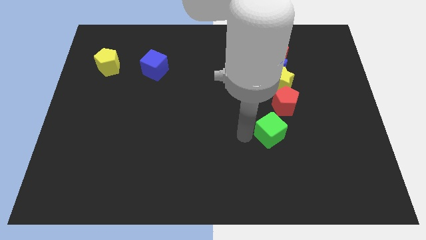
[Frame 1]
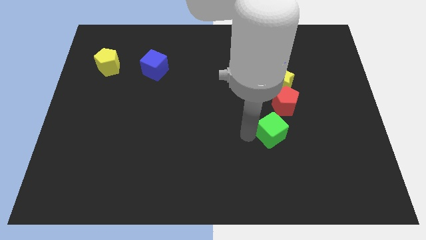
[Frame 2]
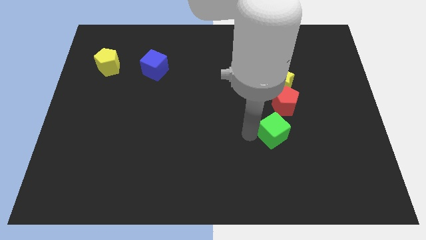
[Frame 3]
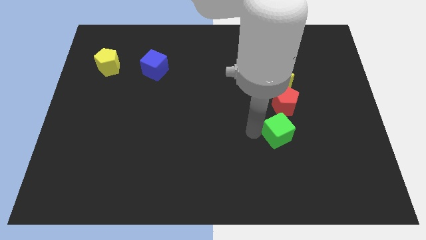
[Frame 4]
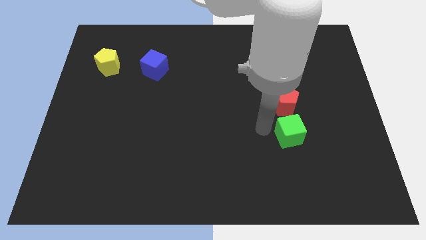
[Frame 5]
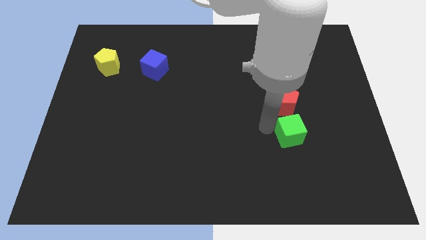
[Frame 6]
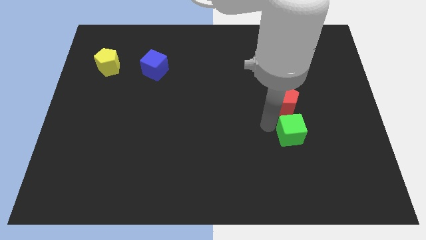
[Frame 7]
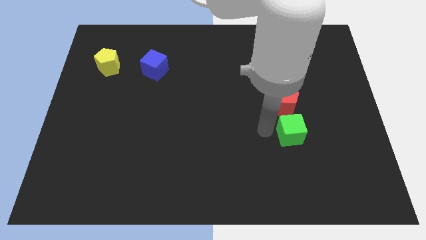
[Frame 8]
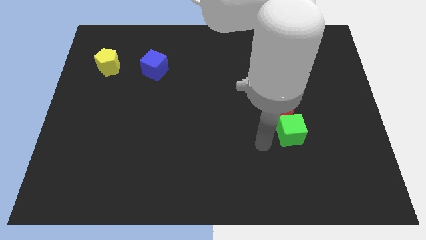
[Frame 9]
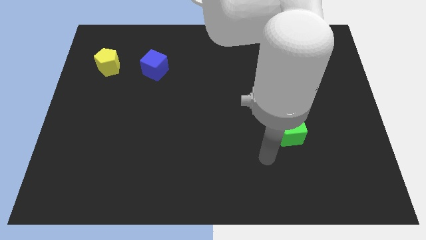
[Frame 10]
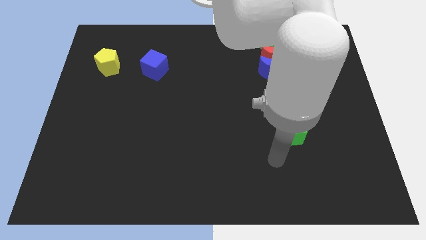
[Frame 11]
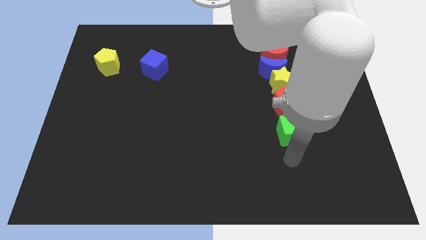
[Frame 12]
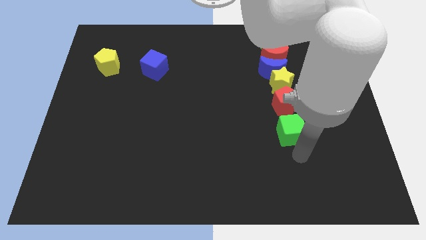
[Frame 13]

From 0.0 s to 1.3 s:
place the green cube below the red pentagon

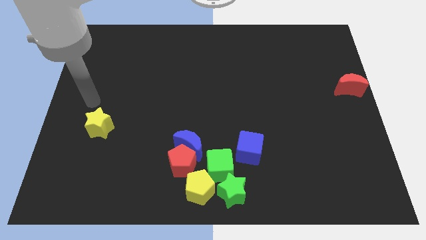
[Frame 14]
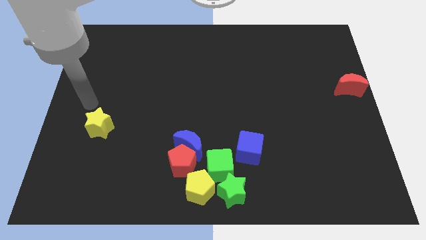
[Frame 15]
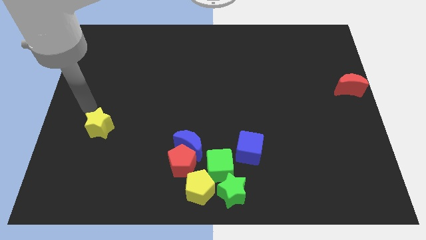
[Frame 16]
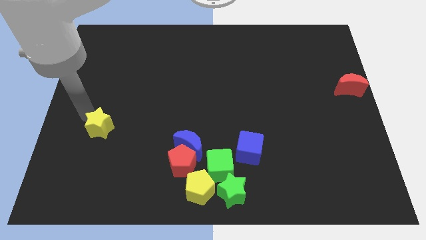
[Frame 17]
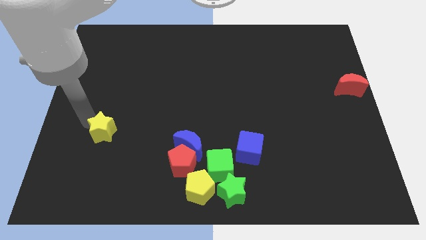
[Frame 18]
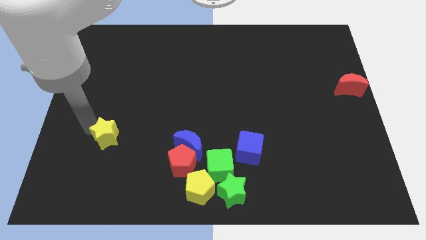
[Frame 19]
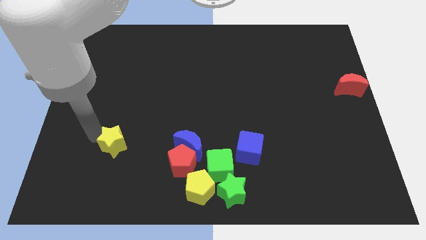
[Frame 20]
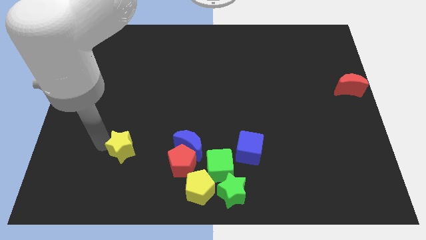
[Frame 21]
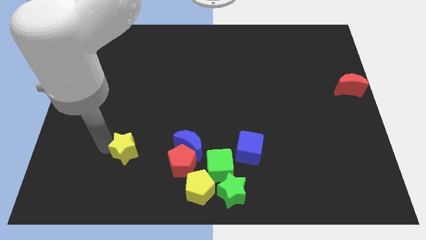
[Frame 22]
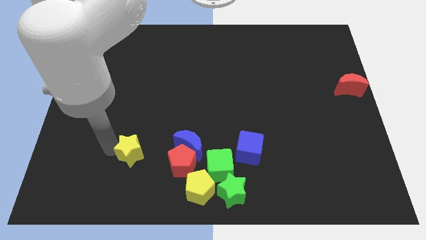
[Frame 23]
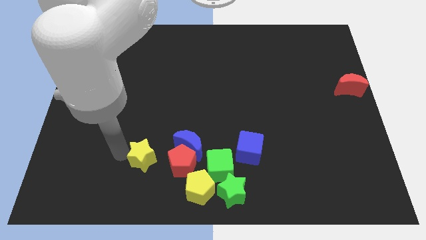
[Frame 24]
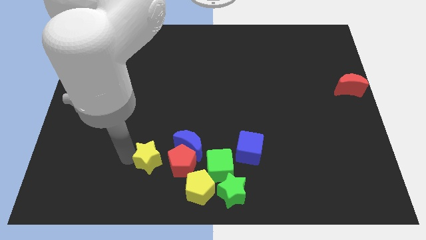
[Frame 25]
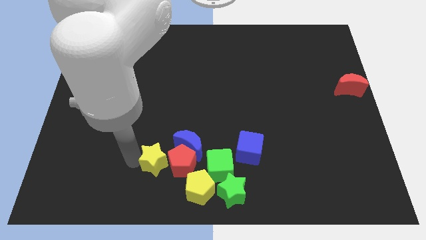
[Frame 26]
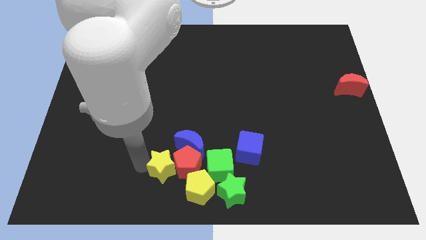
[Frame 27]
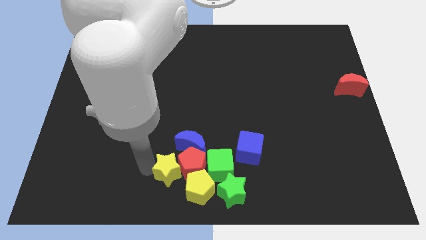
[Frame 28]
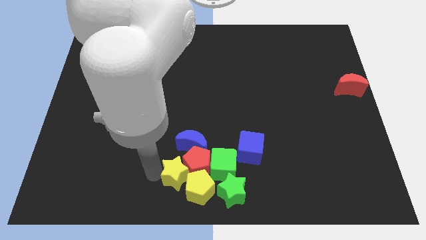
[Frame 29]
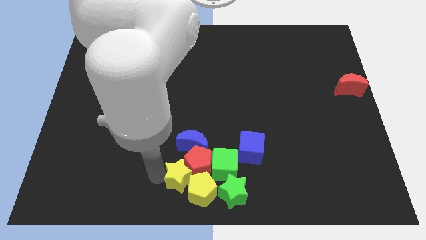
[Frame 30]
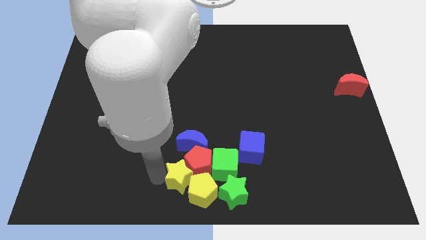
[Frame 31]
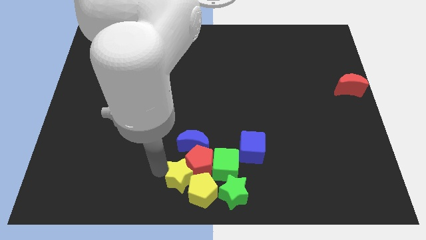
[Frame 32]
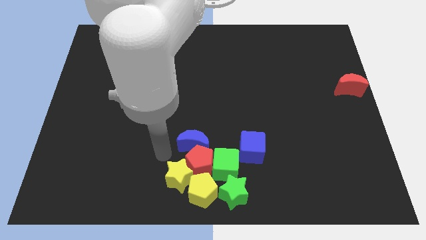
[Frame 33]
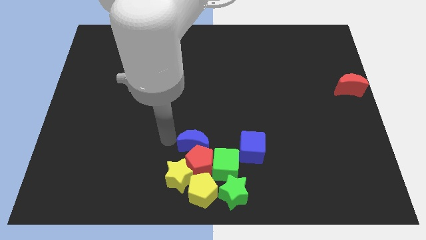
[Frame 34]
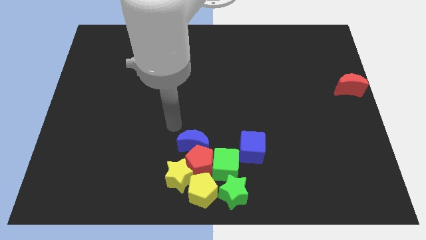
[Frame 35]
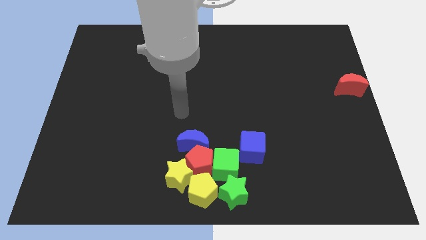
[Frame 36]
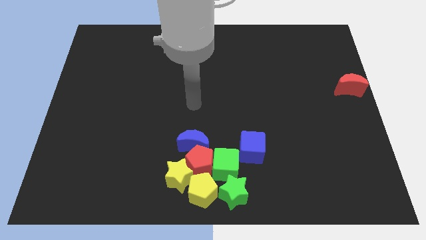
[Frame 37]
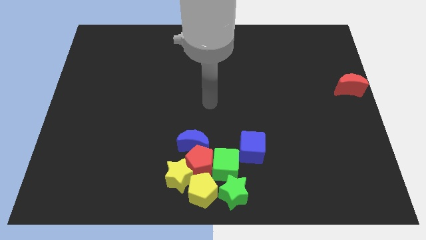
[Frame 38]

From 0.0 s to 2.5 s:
move the yellow star to the bottom left of the red pentagon

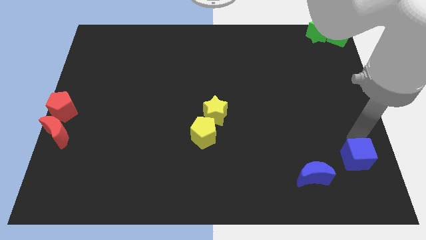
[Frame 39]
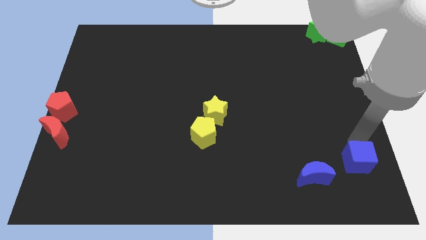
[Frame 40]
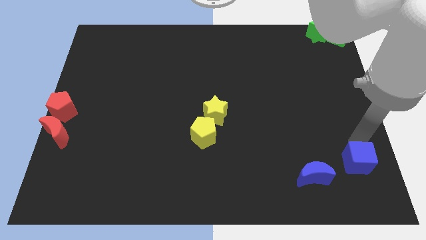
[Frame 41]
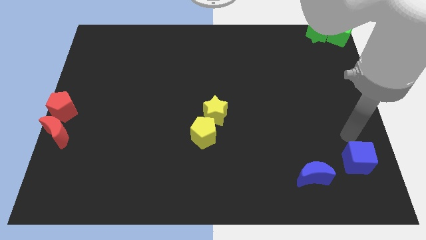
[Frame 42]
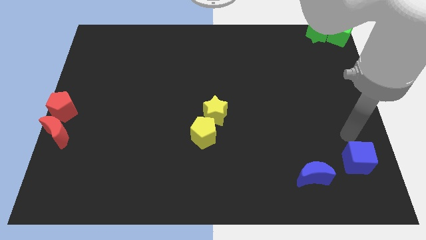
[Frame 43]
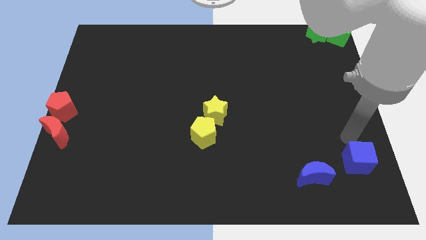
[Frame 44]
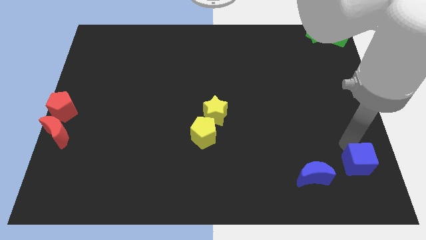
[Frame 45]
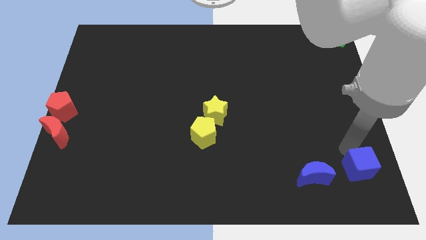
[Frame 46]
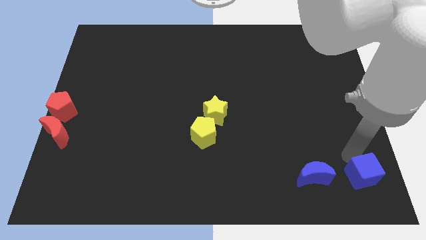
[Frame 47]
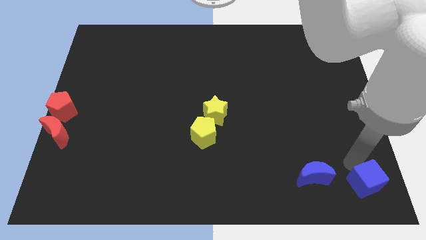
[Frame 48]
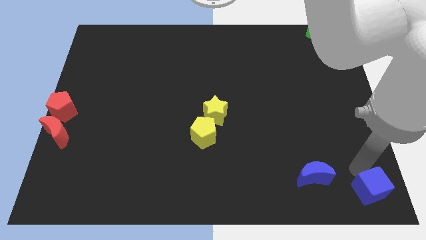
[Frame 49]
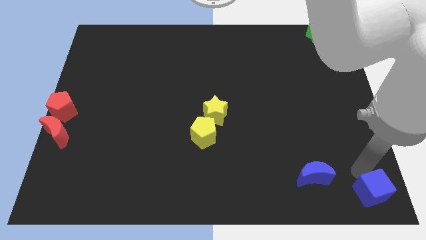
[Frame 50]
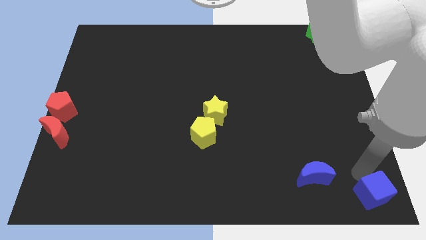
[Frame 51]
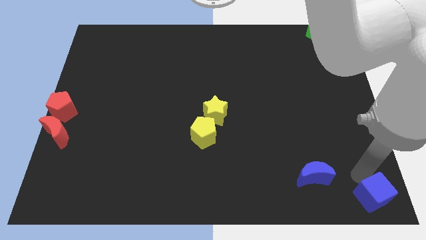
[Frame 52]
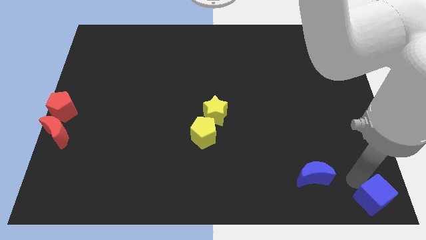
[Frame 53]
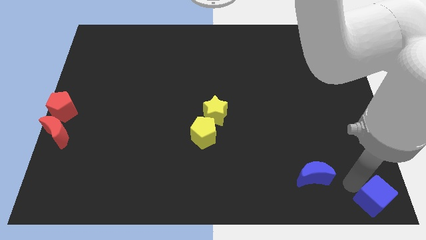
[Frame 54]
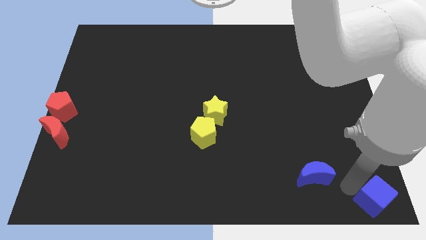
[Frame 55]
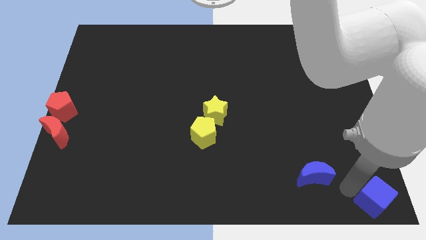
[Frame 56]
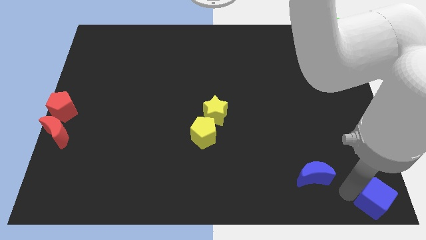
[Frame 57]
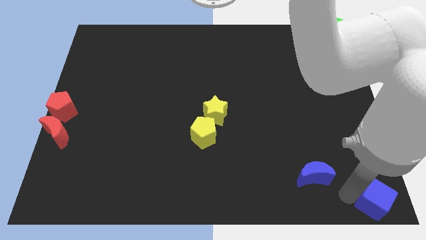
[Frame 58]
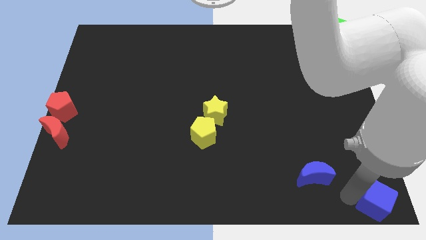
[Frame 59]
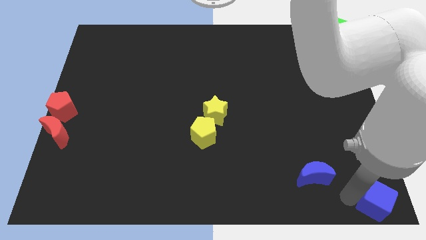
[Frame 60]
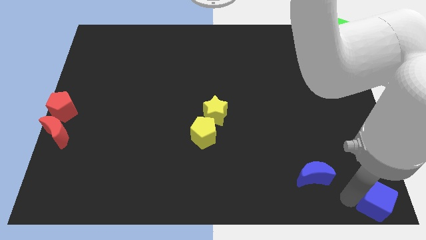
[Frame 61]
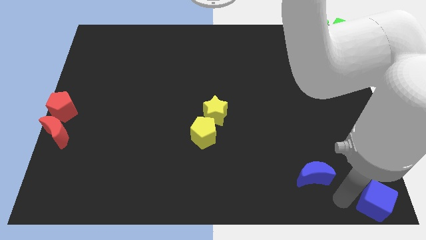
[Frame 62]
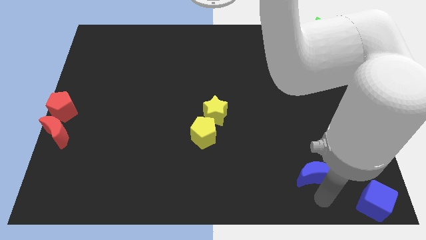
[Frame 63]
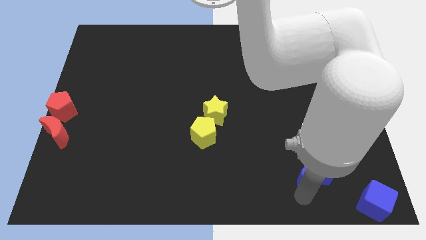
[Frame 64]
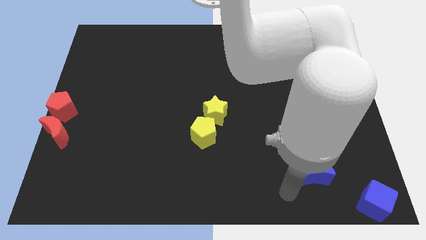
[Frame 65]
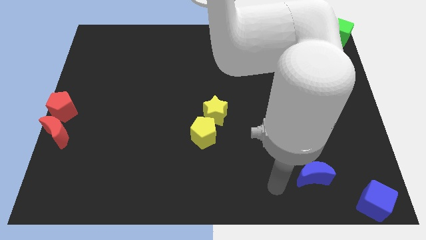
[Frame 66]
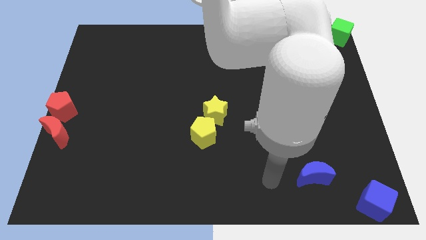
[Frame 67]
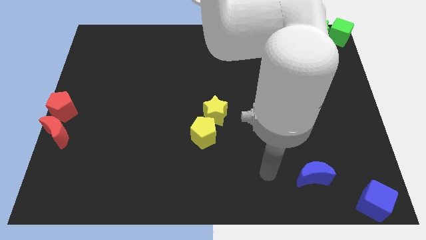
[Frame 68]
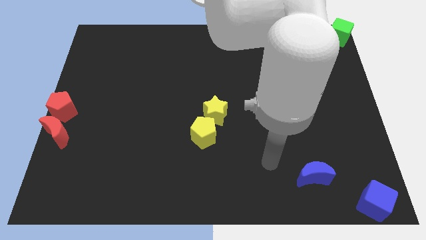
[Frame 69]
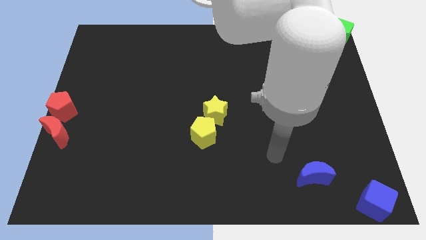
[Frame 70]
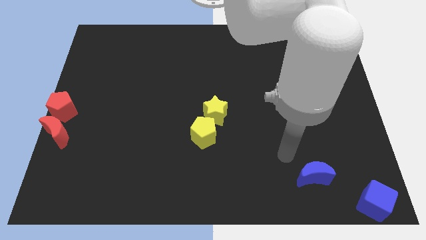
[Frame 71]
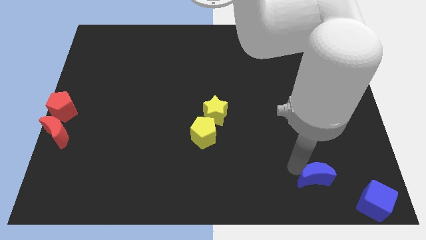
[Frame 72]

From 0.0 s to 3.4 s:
move the blue cube to the bottom right corner of the board

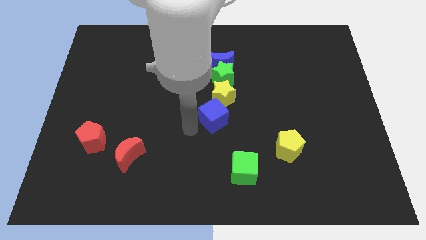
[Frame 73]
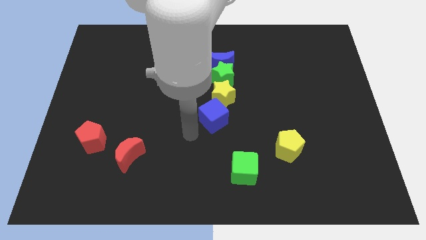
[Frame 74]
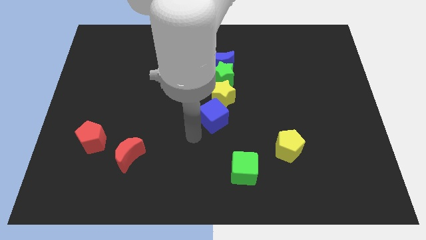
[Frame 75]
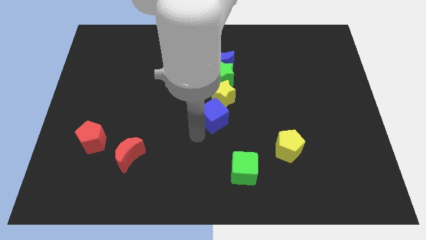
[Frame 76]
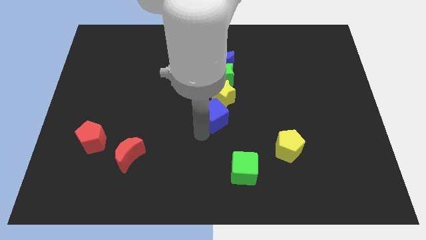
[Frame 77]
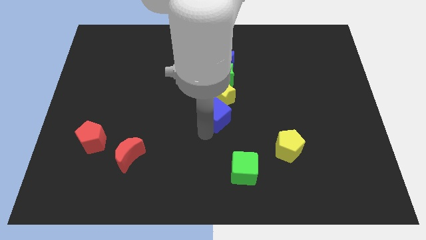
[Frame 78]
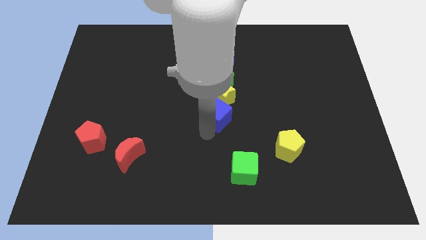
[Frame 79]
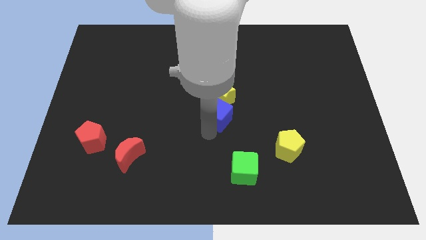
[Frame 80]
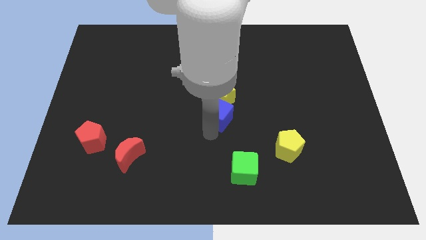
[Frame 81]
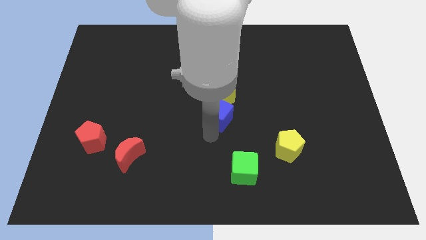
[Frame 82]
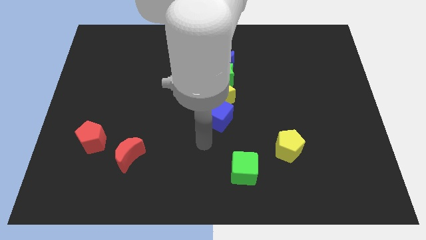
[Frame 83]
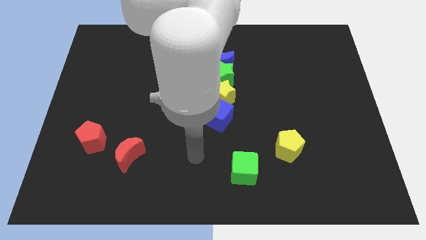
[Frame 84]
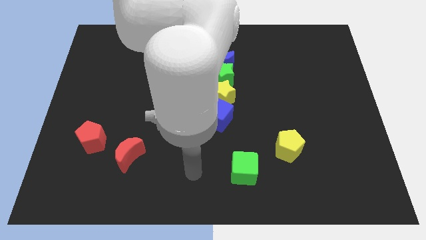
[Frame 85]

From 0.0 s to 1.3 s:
adjust the blue cube

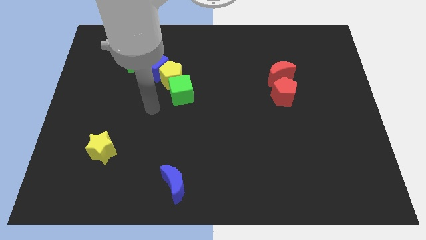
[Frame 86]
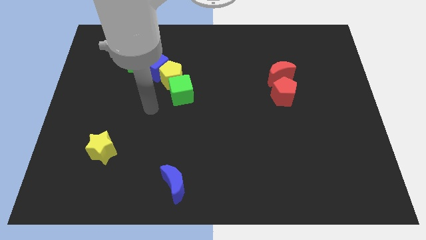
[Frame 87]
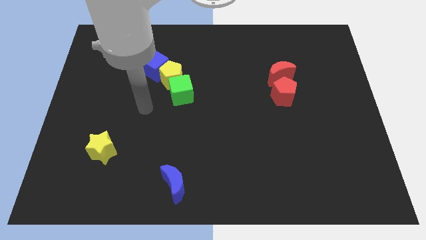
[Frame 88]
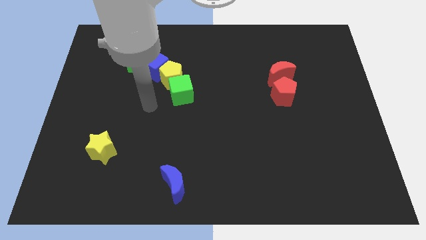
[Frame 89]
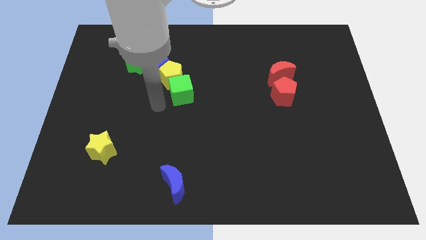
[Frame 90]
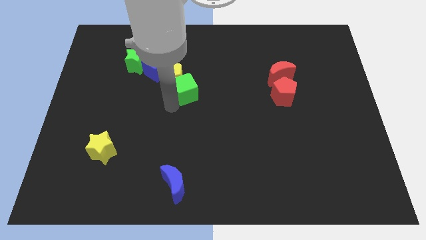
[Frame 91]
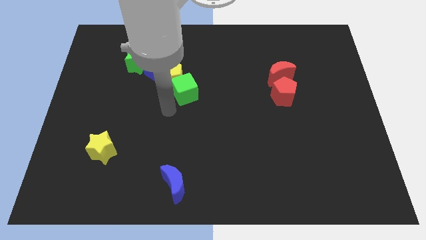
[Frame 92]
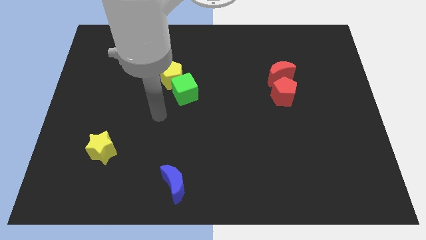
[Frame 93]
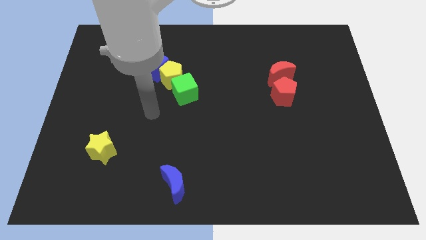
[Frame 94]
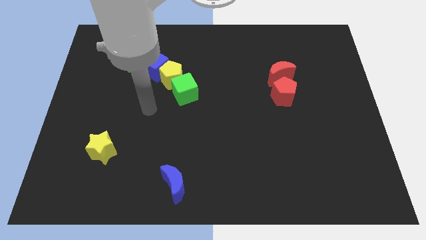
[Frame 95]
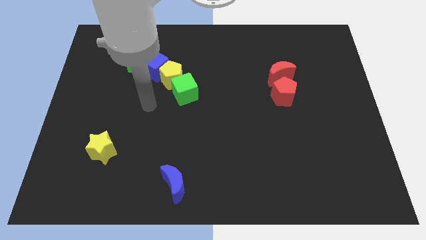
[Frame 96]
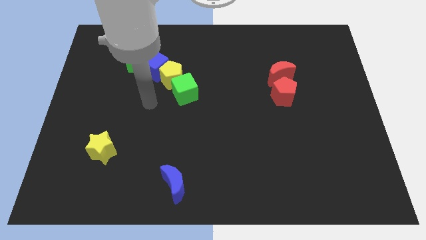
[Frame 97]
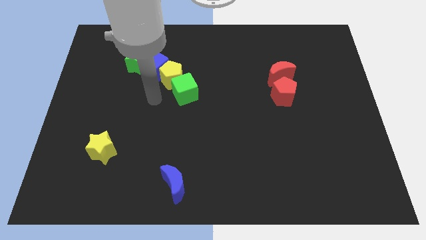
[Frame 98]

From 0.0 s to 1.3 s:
place your arm to the left side of the green cube
